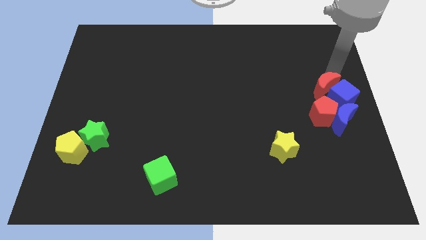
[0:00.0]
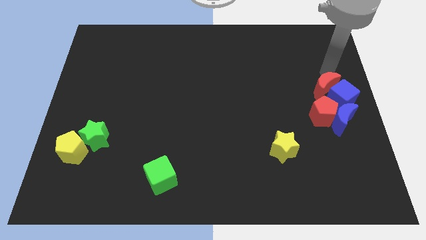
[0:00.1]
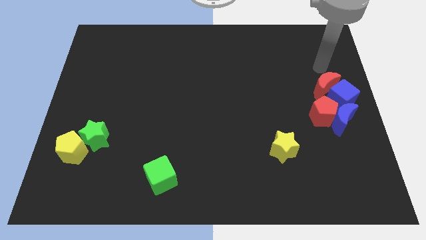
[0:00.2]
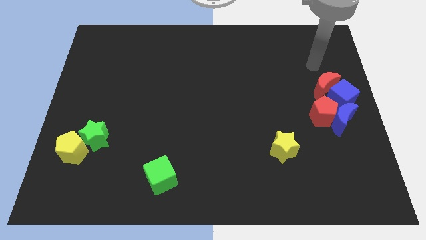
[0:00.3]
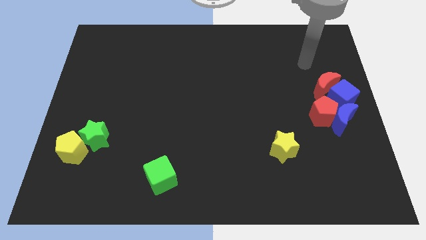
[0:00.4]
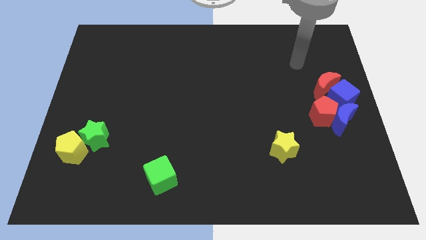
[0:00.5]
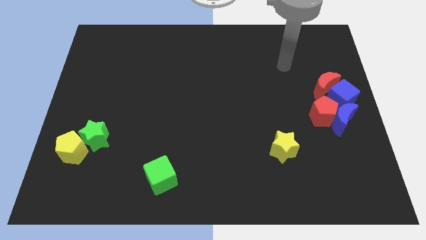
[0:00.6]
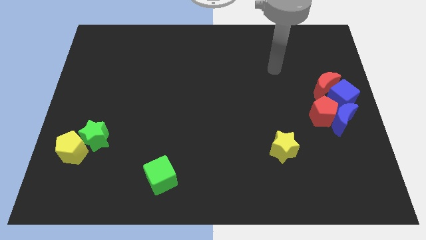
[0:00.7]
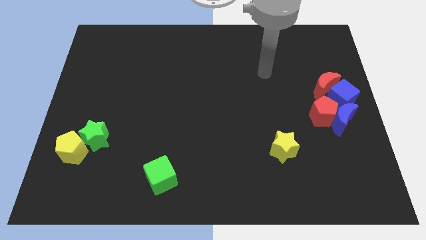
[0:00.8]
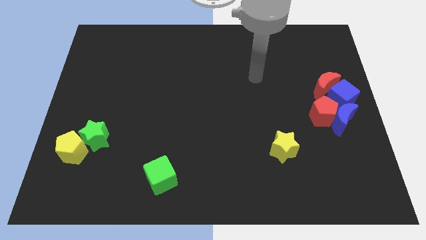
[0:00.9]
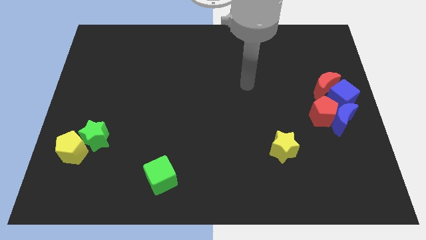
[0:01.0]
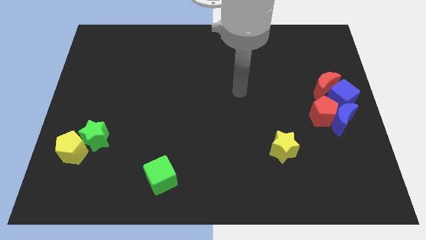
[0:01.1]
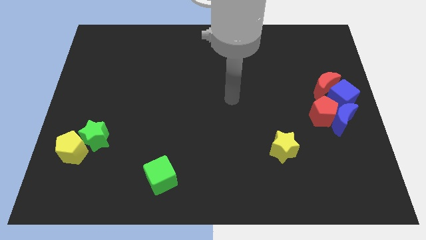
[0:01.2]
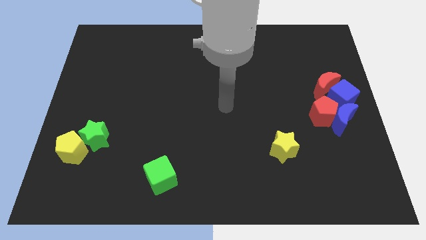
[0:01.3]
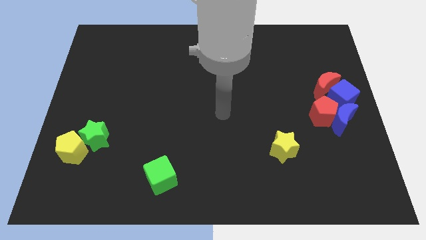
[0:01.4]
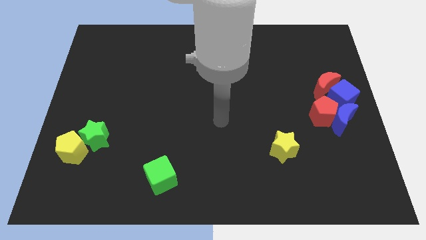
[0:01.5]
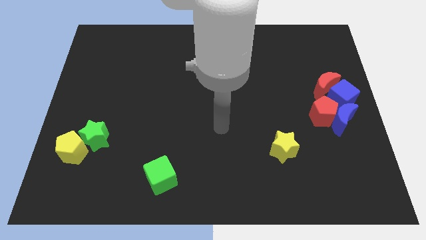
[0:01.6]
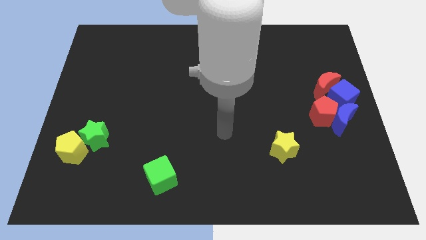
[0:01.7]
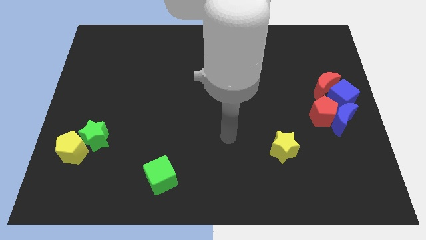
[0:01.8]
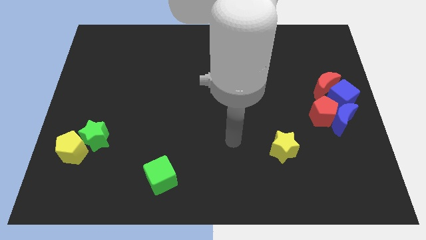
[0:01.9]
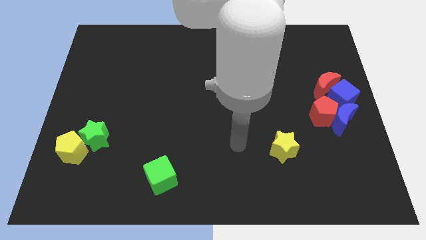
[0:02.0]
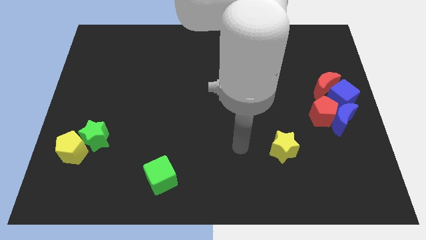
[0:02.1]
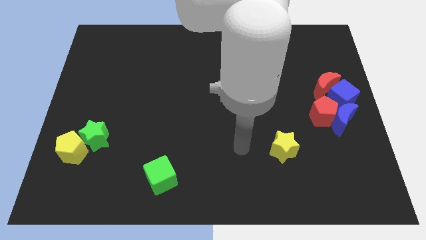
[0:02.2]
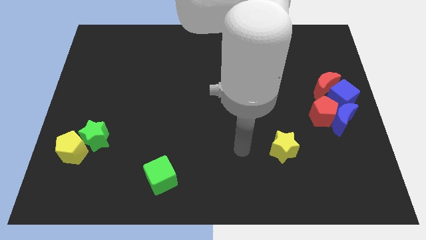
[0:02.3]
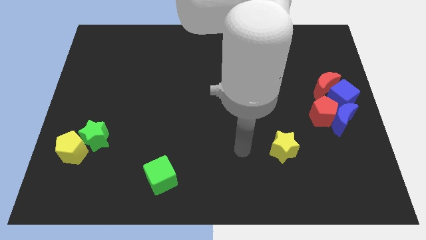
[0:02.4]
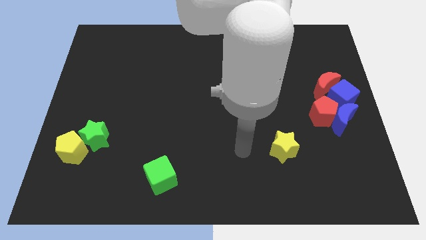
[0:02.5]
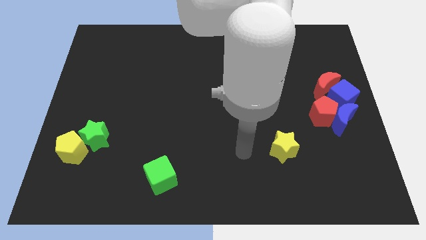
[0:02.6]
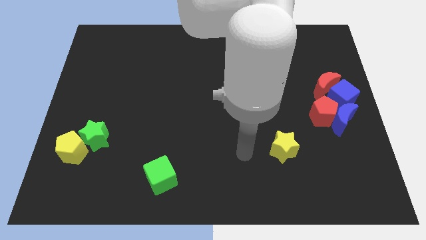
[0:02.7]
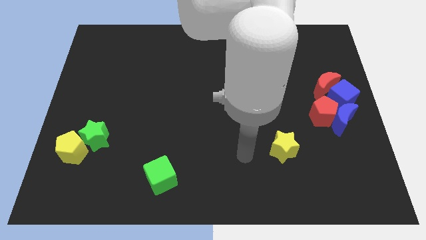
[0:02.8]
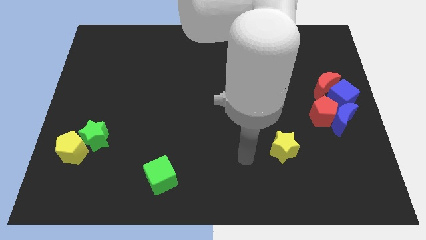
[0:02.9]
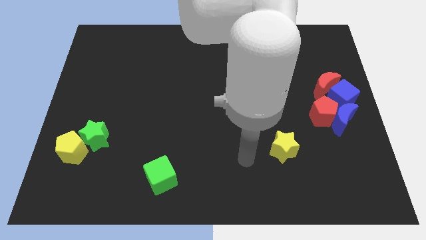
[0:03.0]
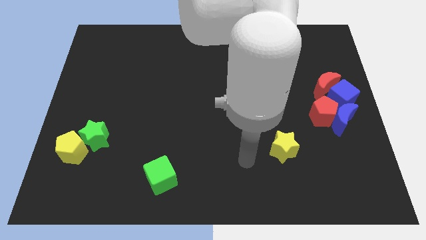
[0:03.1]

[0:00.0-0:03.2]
move your arm away from red moon

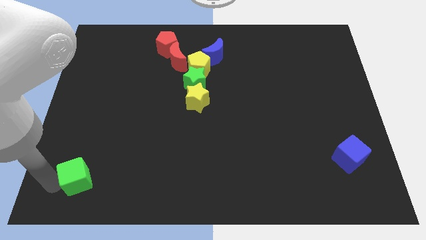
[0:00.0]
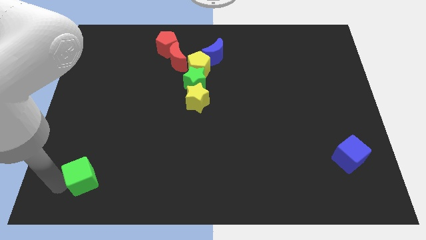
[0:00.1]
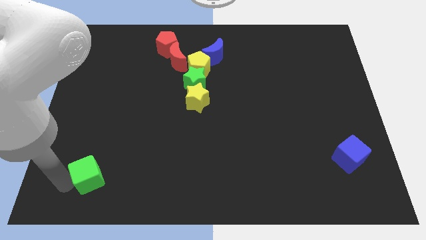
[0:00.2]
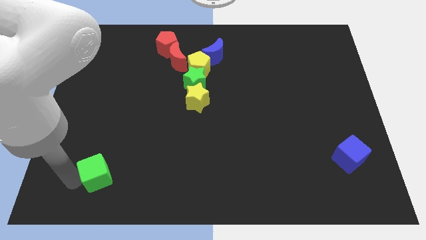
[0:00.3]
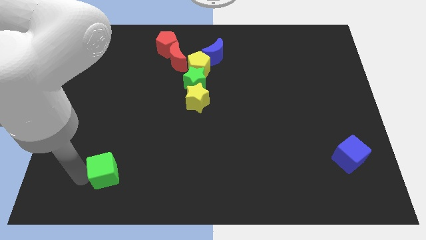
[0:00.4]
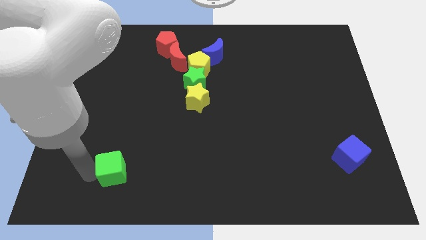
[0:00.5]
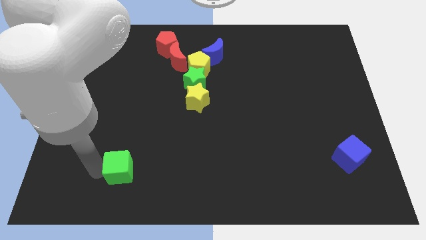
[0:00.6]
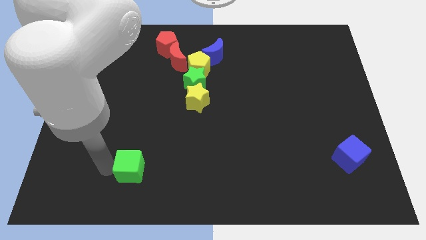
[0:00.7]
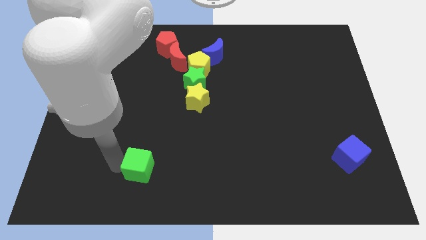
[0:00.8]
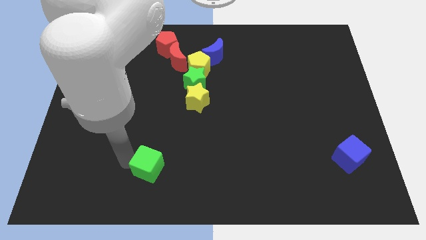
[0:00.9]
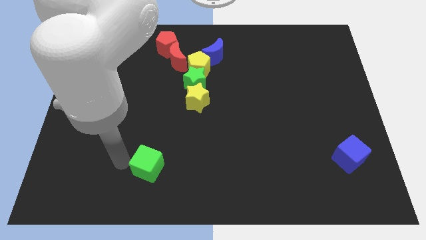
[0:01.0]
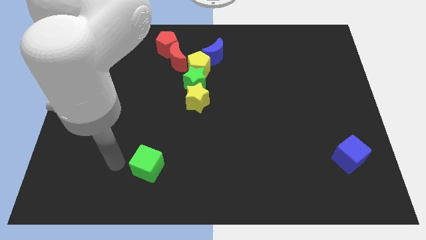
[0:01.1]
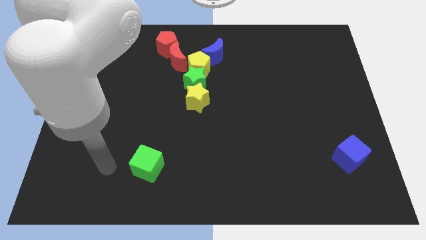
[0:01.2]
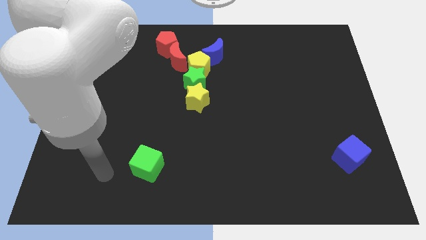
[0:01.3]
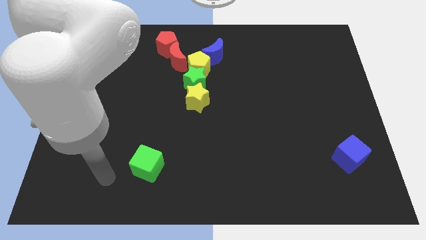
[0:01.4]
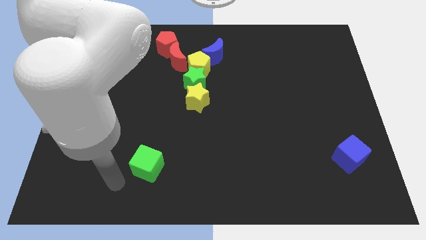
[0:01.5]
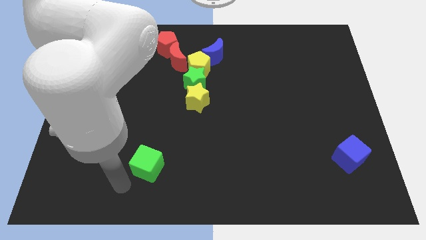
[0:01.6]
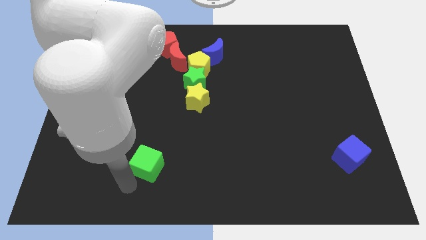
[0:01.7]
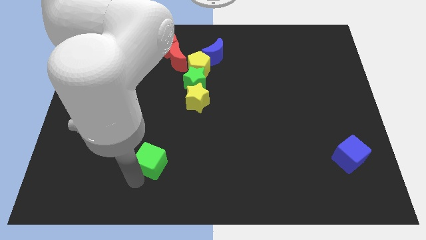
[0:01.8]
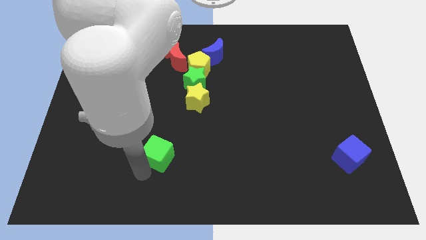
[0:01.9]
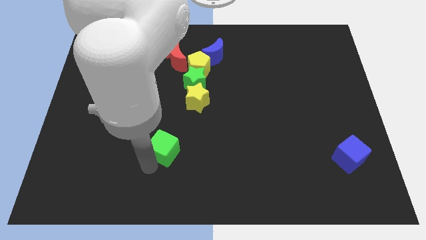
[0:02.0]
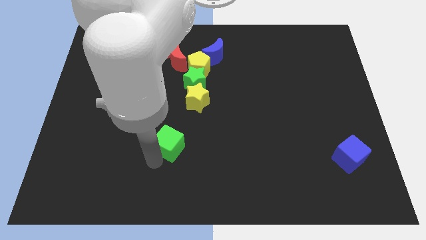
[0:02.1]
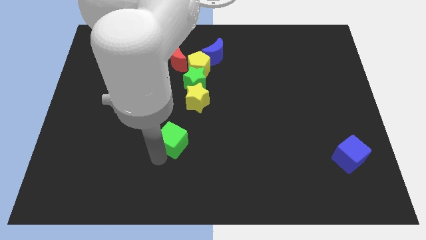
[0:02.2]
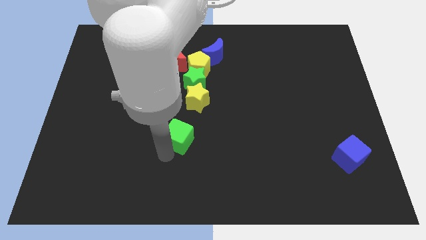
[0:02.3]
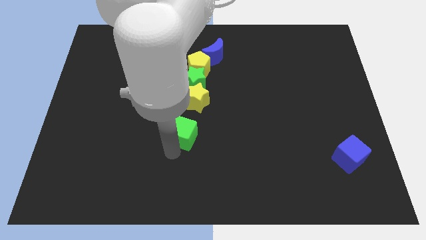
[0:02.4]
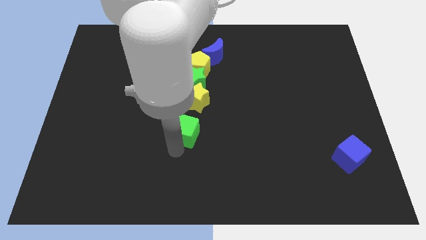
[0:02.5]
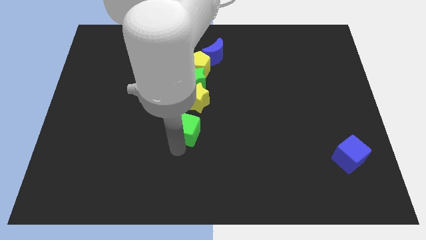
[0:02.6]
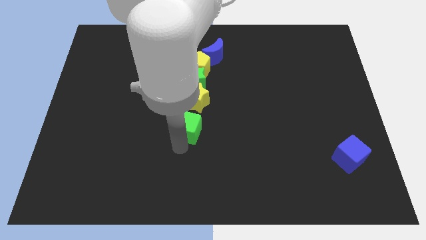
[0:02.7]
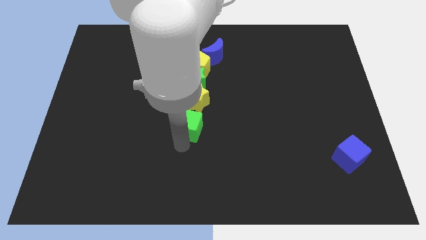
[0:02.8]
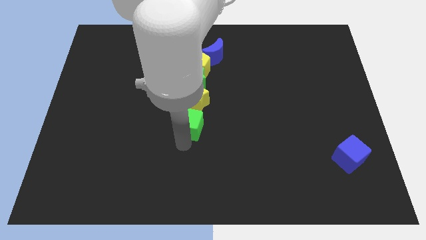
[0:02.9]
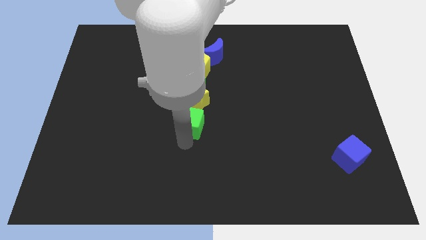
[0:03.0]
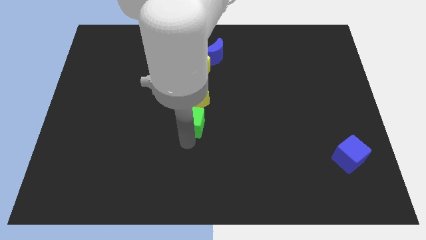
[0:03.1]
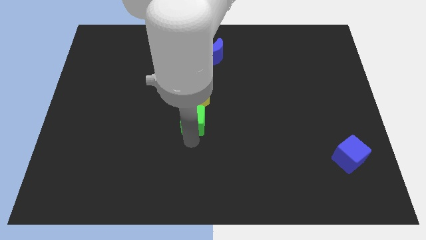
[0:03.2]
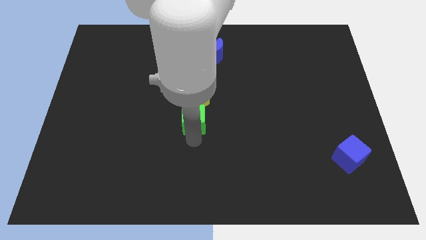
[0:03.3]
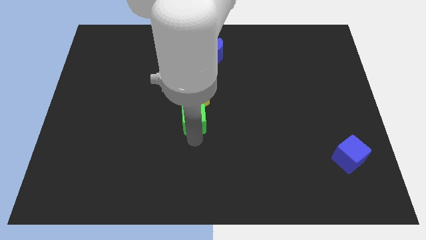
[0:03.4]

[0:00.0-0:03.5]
place green cube below yellow star
